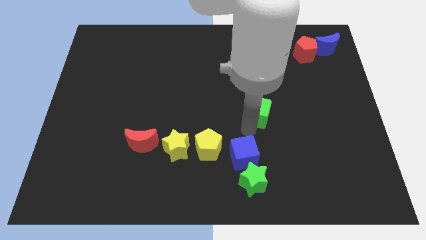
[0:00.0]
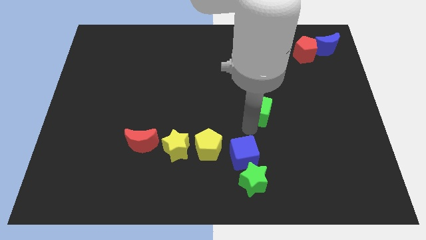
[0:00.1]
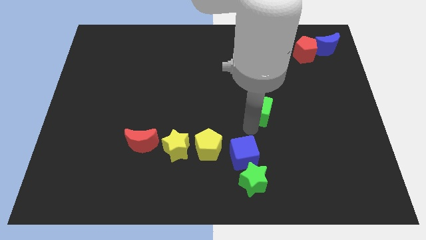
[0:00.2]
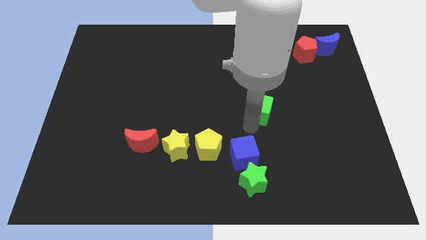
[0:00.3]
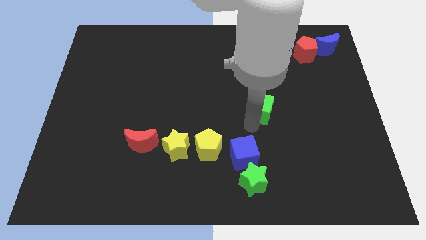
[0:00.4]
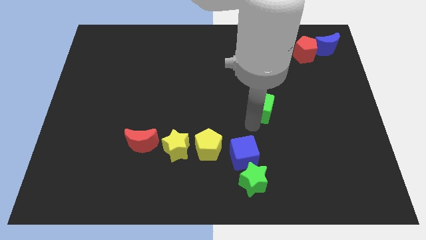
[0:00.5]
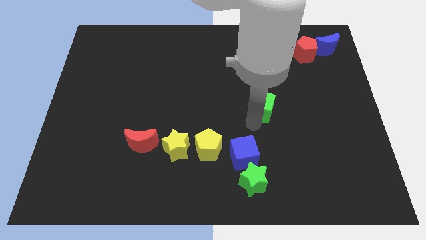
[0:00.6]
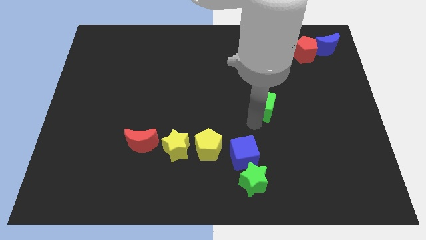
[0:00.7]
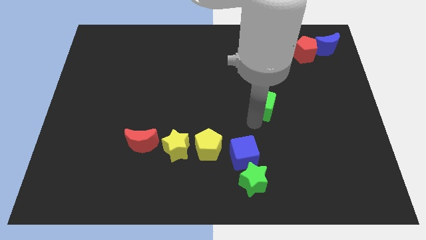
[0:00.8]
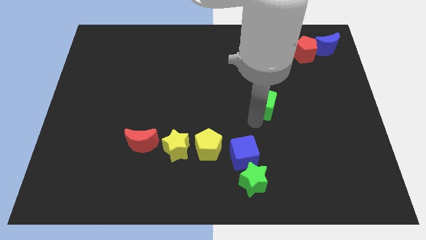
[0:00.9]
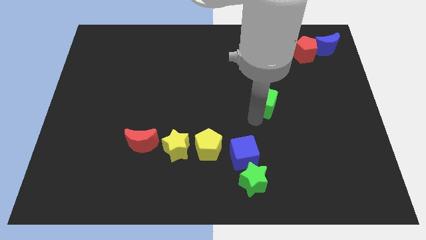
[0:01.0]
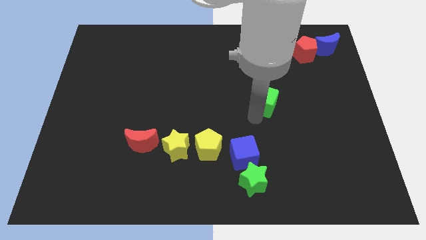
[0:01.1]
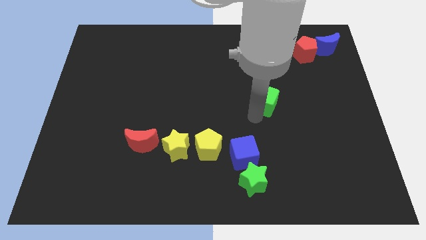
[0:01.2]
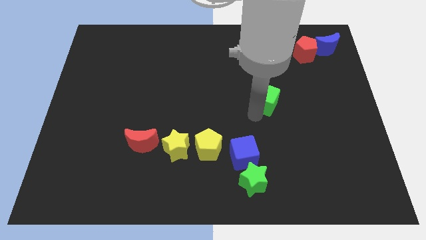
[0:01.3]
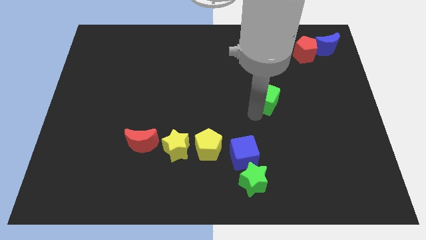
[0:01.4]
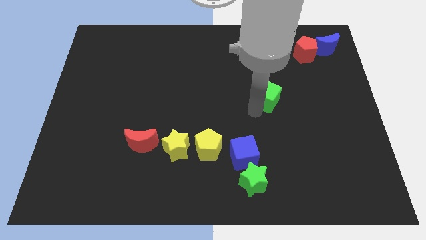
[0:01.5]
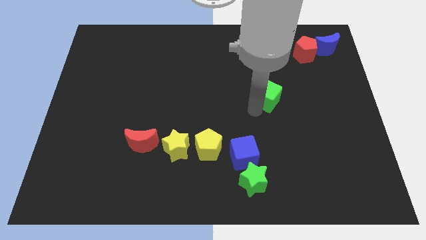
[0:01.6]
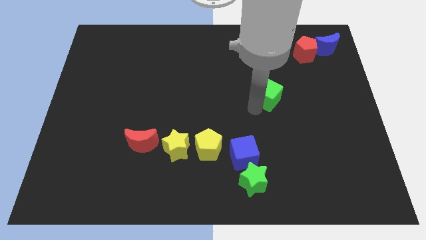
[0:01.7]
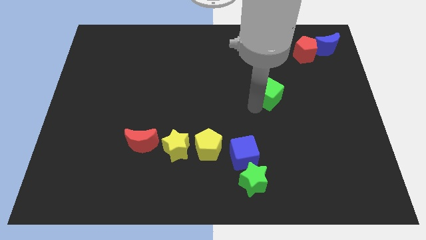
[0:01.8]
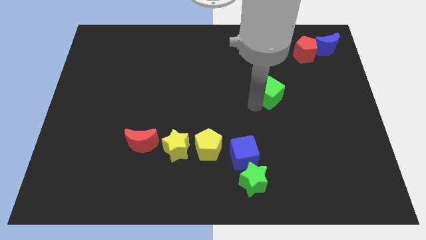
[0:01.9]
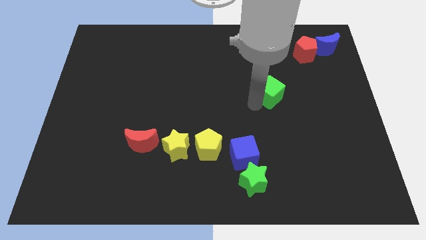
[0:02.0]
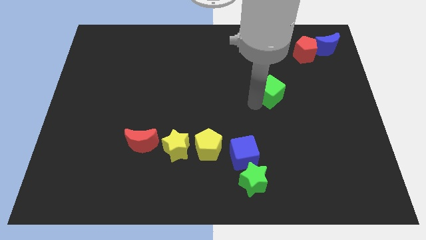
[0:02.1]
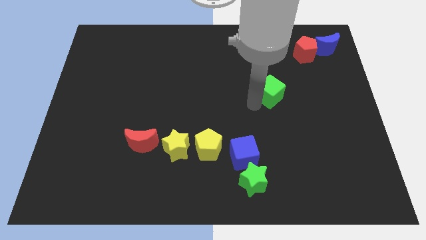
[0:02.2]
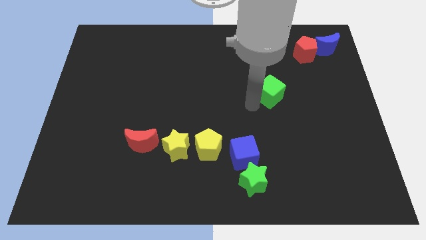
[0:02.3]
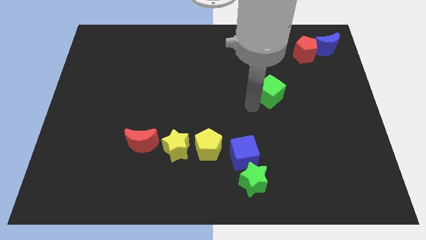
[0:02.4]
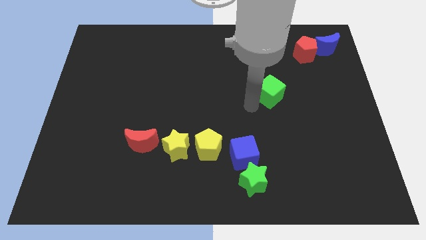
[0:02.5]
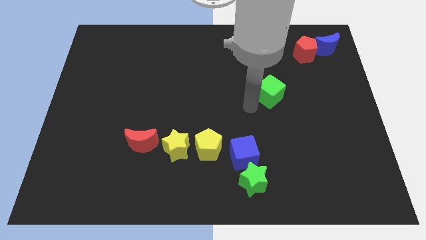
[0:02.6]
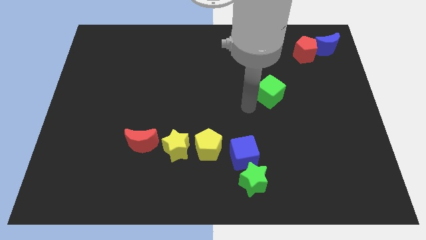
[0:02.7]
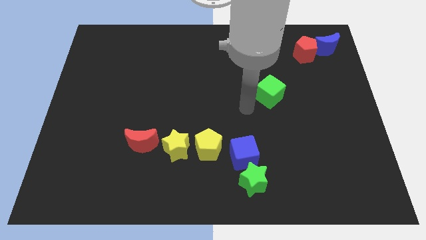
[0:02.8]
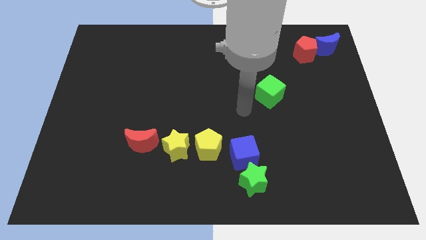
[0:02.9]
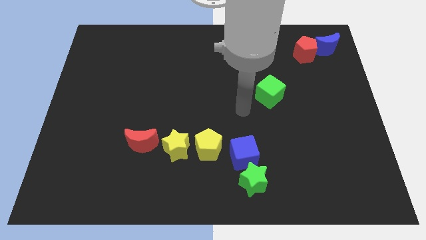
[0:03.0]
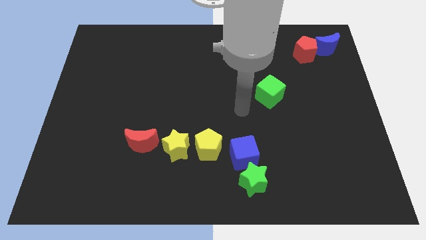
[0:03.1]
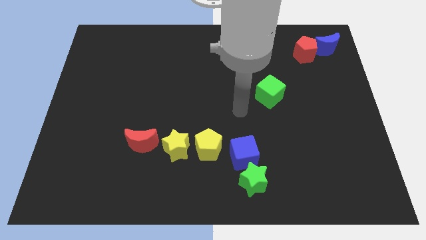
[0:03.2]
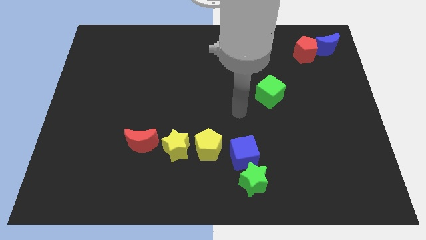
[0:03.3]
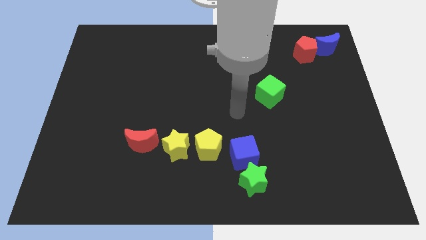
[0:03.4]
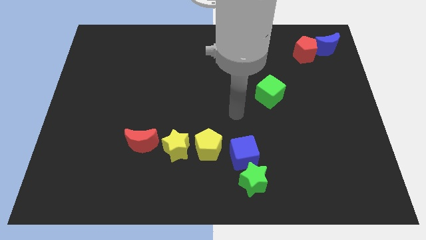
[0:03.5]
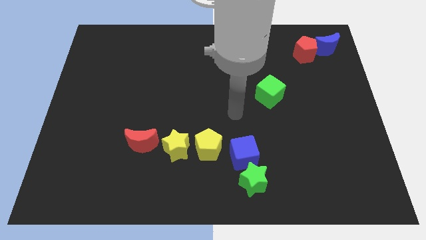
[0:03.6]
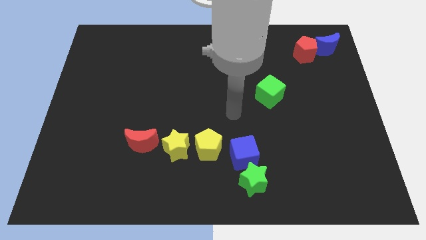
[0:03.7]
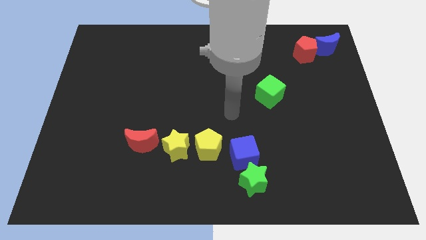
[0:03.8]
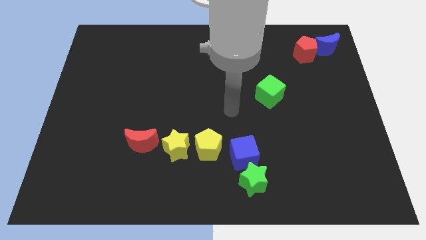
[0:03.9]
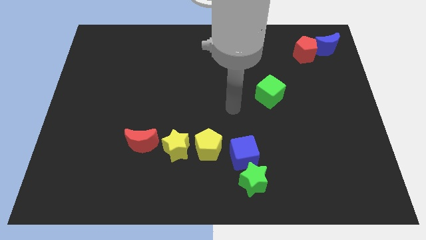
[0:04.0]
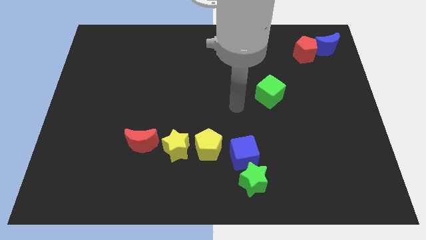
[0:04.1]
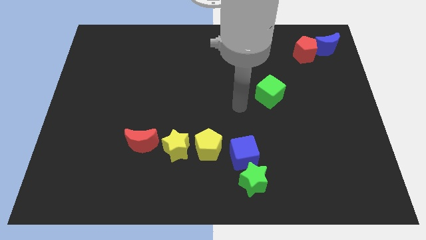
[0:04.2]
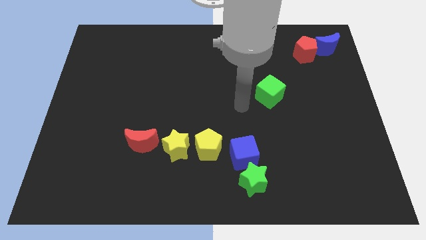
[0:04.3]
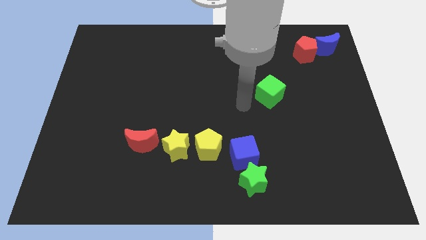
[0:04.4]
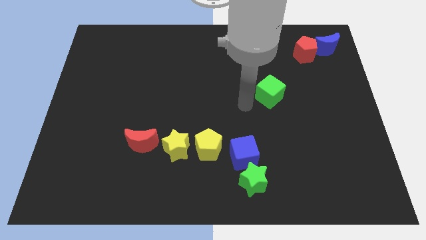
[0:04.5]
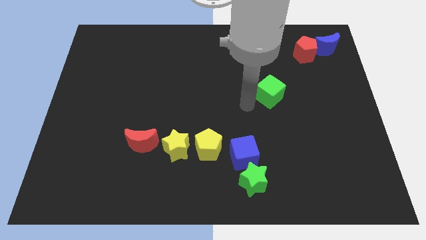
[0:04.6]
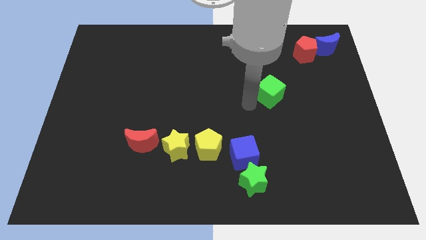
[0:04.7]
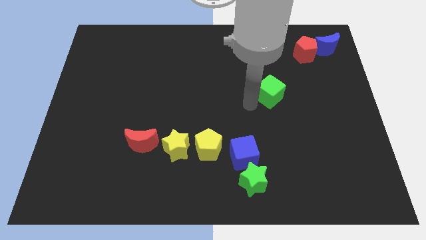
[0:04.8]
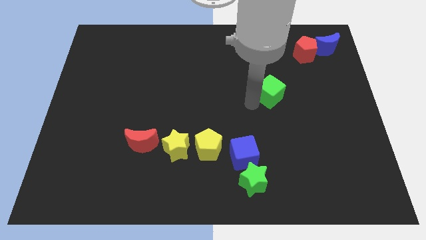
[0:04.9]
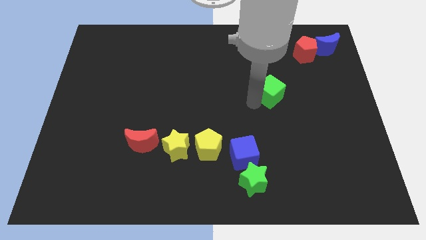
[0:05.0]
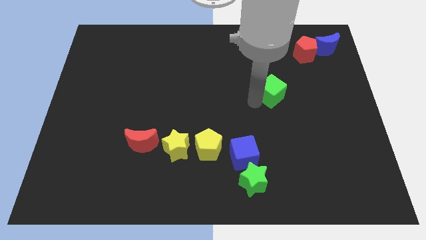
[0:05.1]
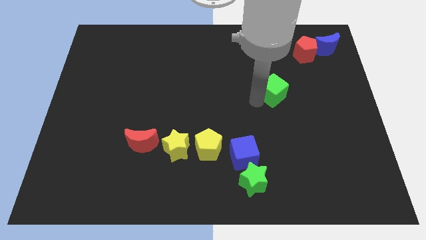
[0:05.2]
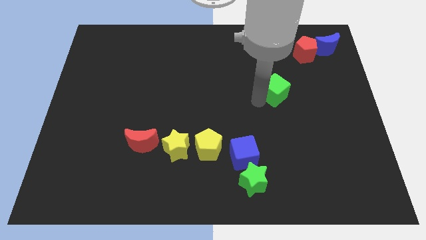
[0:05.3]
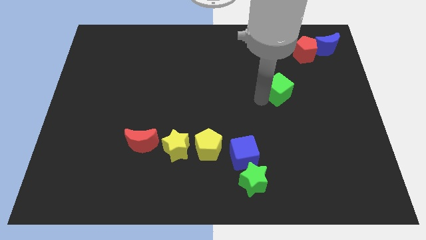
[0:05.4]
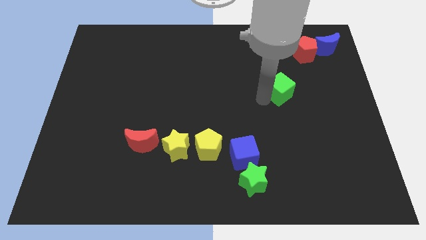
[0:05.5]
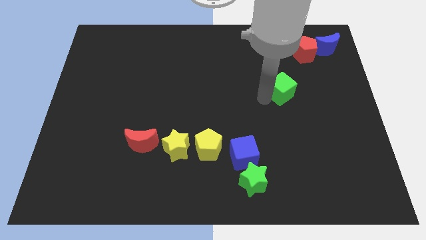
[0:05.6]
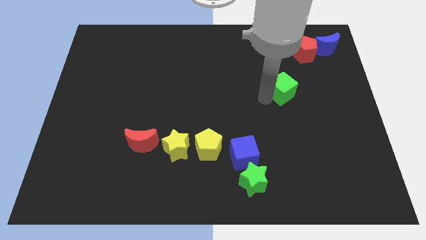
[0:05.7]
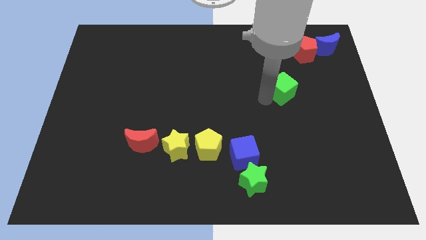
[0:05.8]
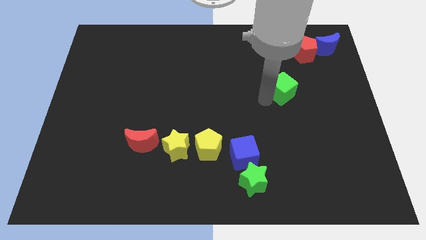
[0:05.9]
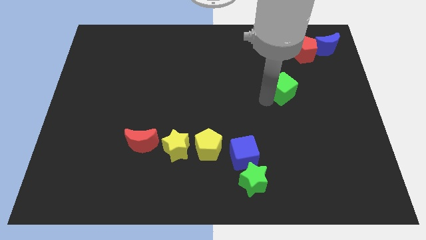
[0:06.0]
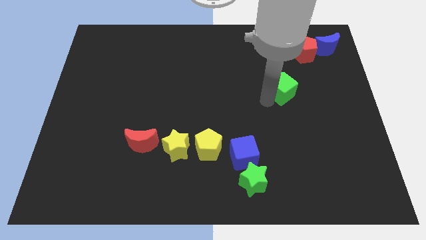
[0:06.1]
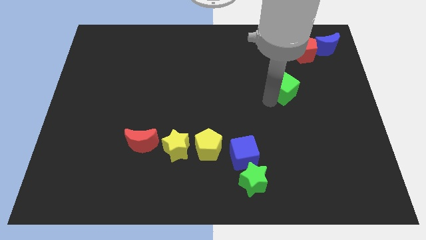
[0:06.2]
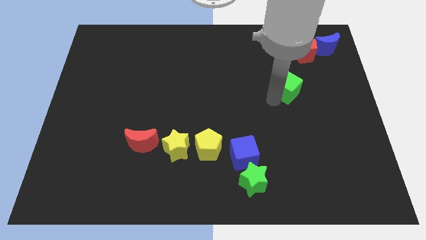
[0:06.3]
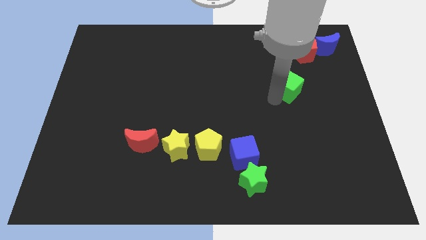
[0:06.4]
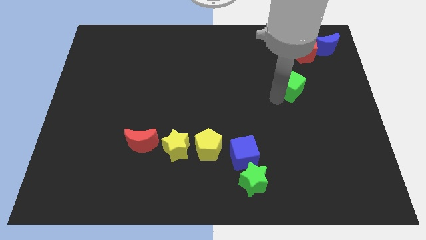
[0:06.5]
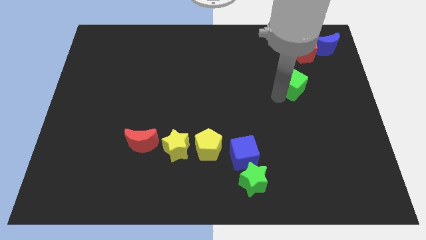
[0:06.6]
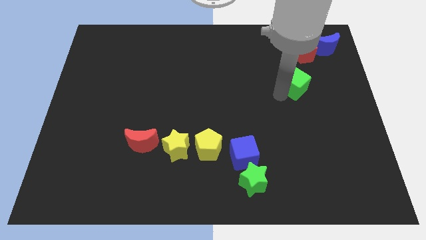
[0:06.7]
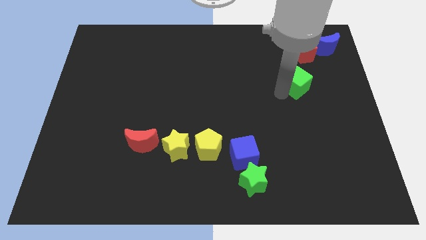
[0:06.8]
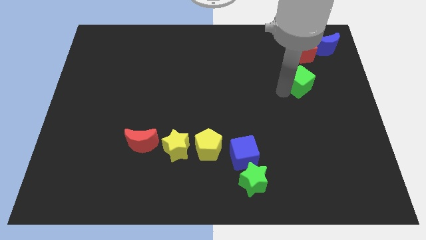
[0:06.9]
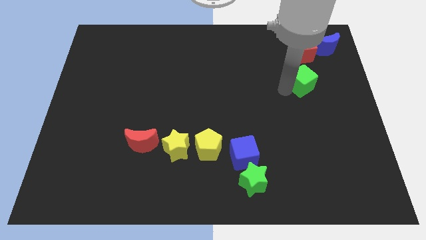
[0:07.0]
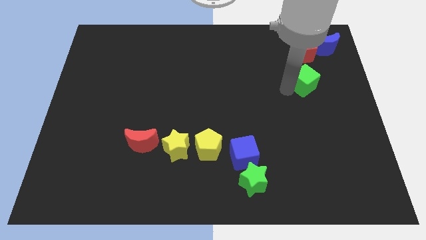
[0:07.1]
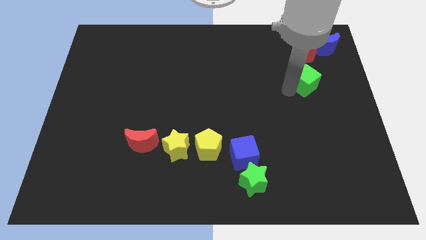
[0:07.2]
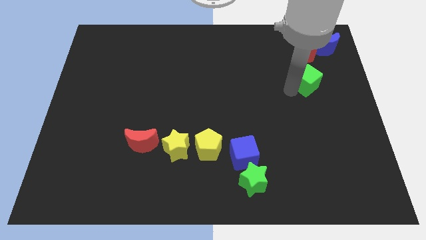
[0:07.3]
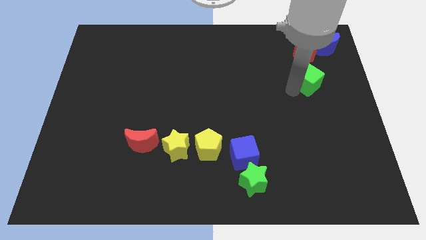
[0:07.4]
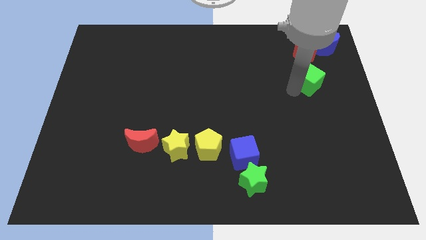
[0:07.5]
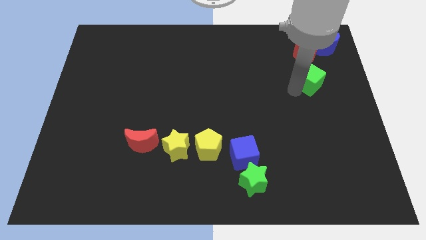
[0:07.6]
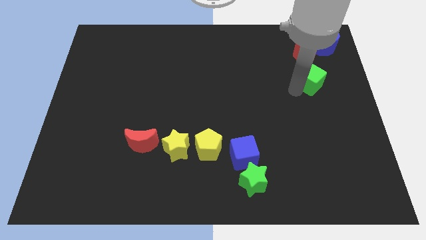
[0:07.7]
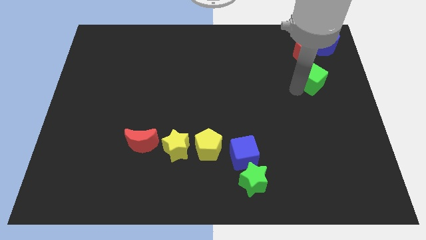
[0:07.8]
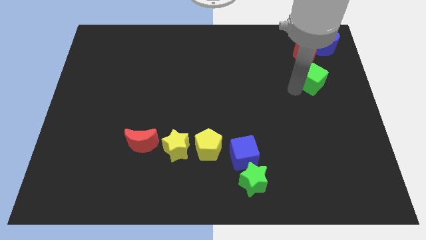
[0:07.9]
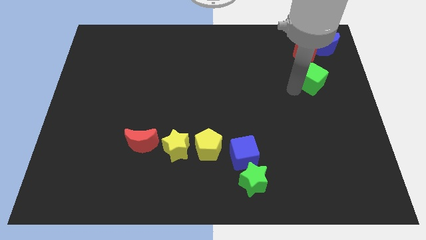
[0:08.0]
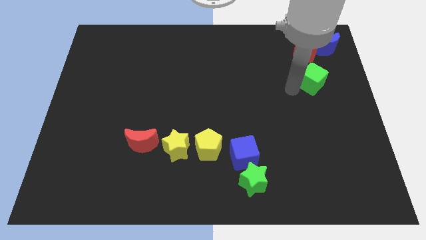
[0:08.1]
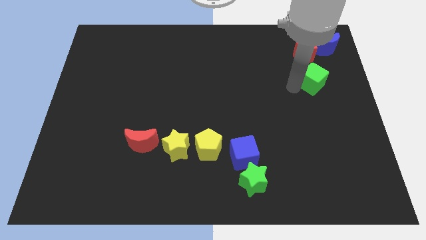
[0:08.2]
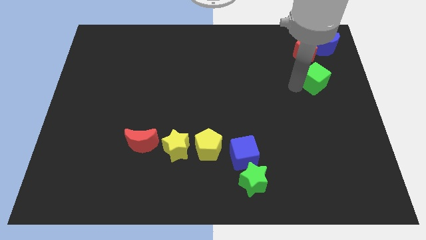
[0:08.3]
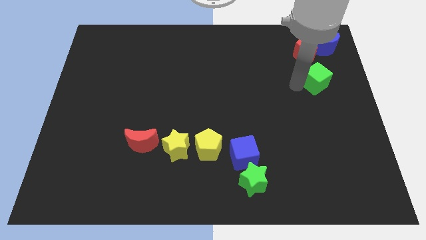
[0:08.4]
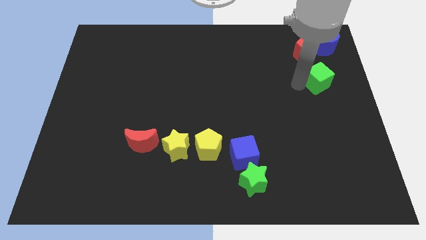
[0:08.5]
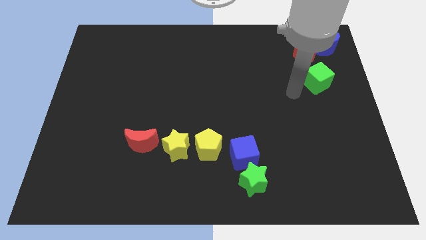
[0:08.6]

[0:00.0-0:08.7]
place the green cube below the red pentagon

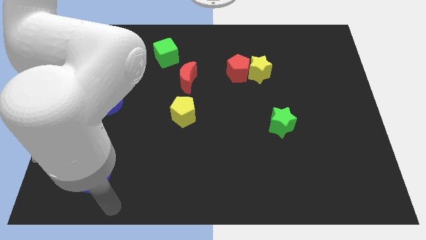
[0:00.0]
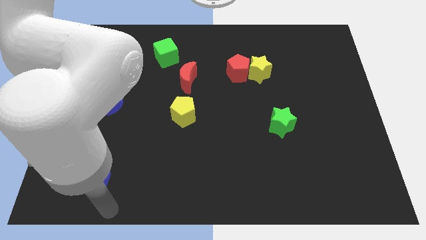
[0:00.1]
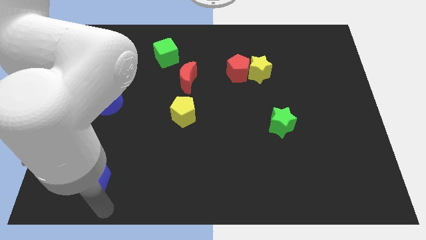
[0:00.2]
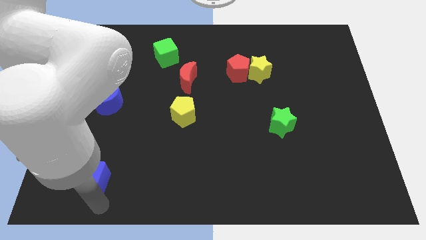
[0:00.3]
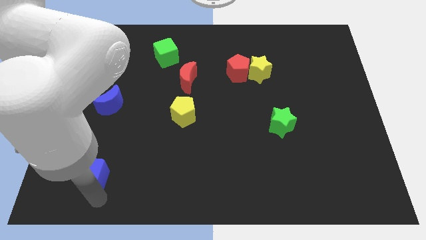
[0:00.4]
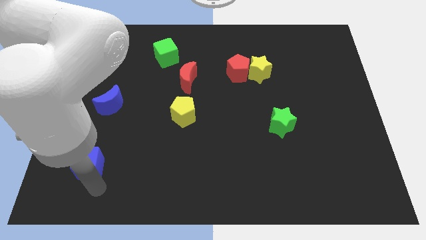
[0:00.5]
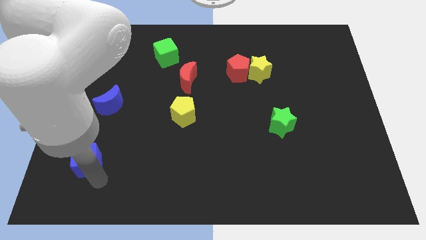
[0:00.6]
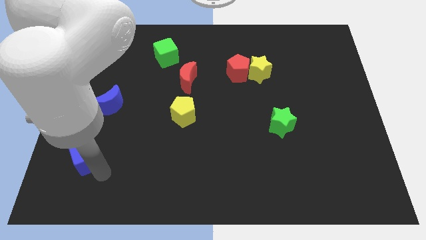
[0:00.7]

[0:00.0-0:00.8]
push blue cube slightly upwards
